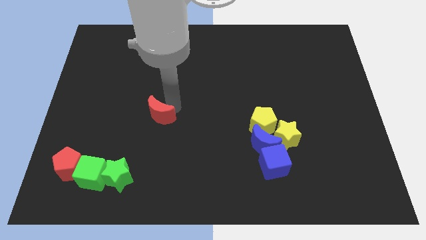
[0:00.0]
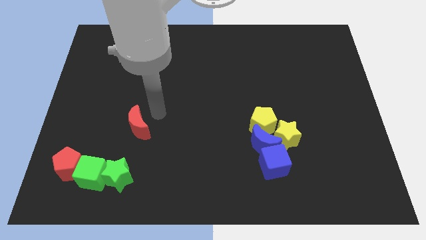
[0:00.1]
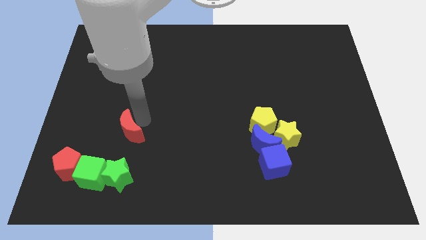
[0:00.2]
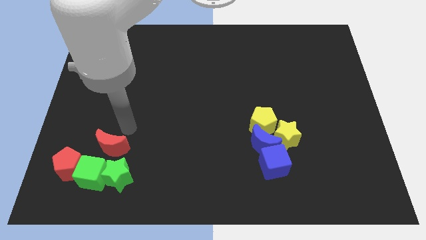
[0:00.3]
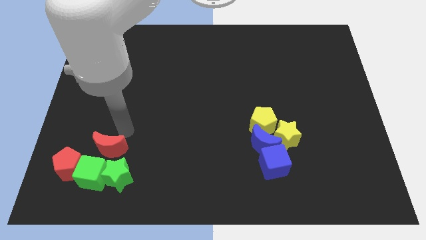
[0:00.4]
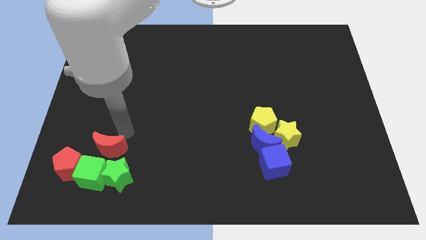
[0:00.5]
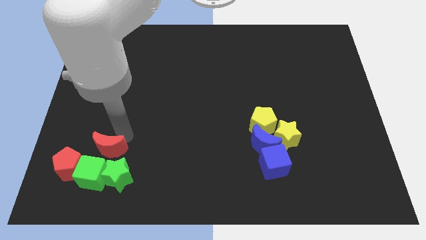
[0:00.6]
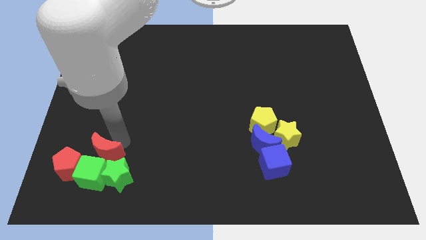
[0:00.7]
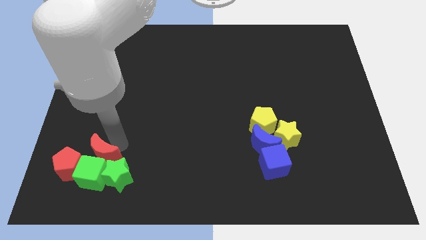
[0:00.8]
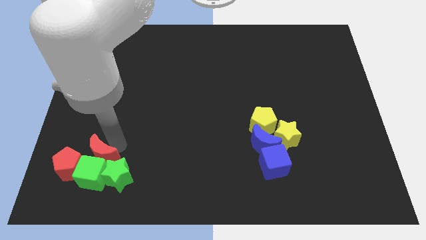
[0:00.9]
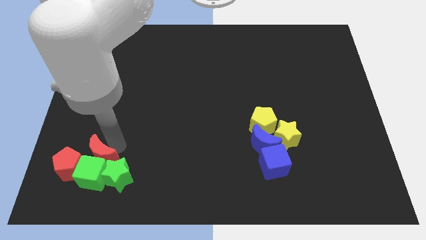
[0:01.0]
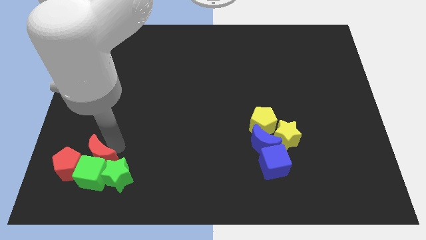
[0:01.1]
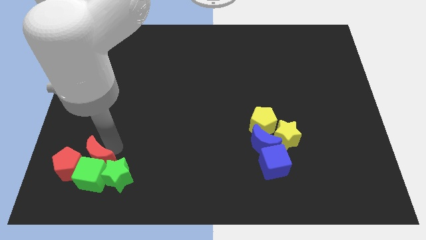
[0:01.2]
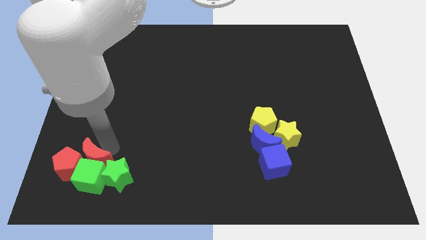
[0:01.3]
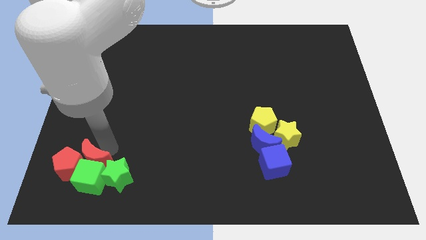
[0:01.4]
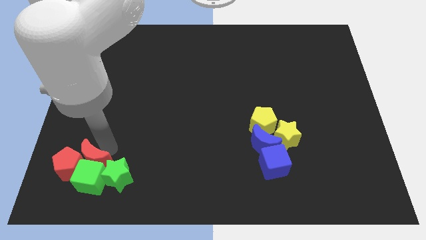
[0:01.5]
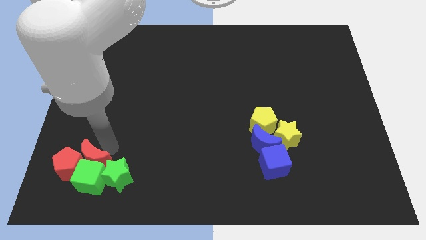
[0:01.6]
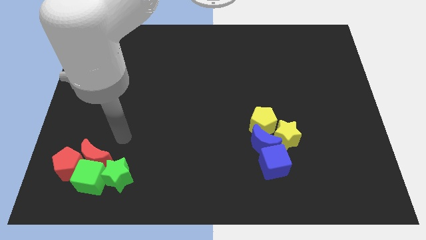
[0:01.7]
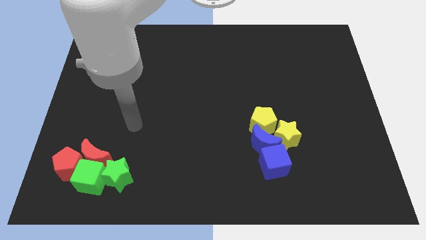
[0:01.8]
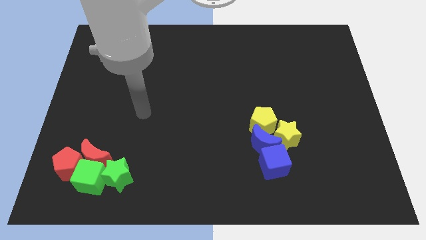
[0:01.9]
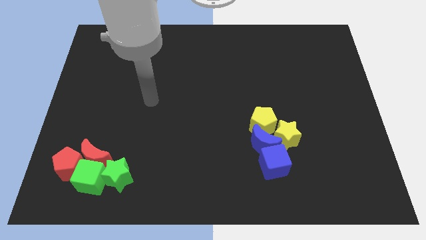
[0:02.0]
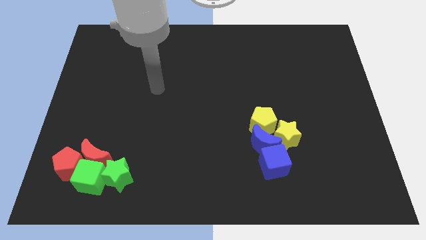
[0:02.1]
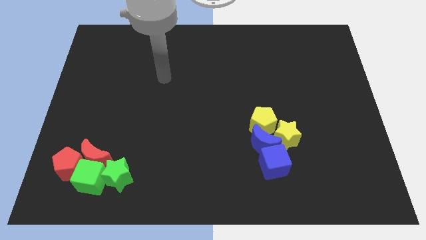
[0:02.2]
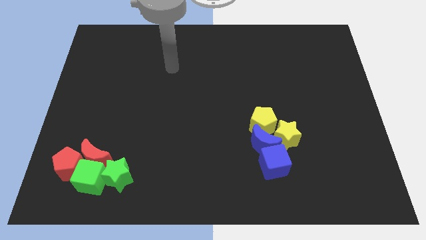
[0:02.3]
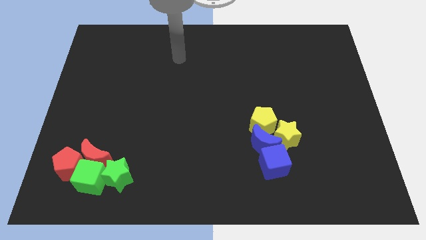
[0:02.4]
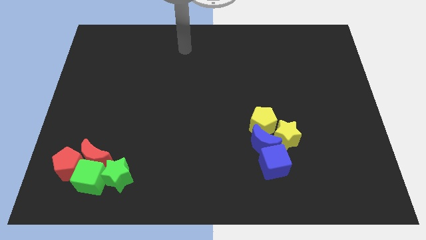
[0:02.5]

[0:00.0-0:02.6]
move the red moon above the green cube

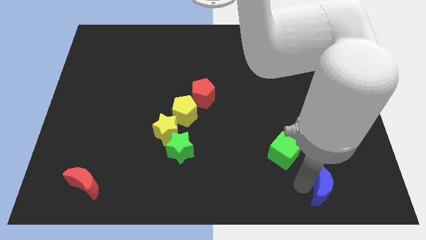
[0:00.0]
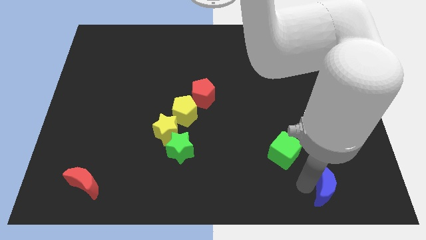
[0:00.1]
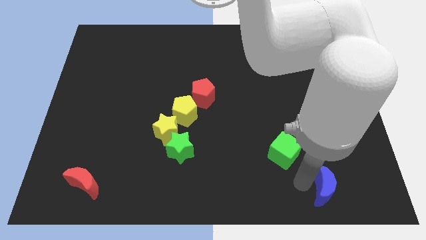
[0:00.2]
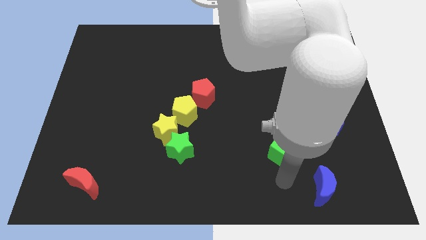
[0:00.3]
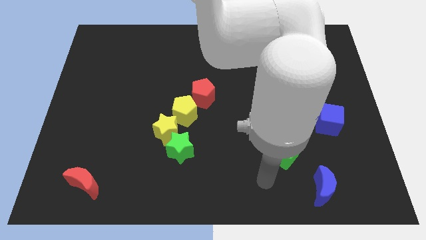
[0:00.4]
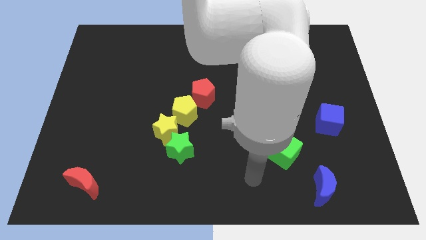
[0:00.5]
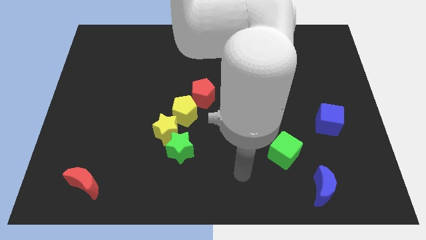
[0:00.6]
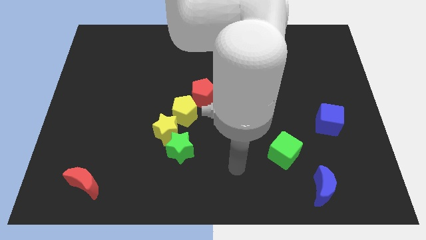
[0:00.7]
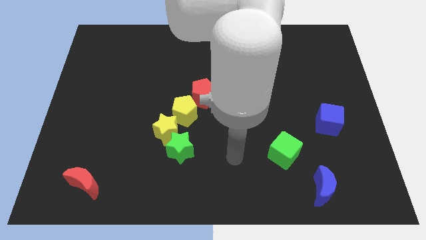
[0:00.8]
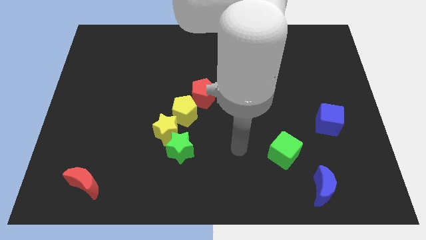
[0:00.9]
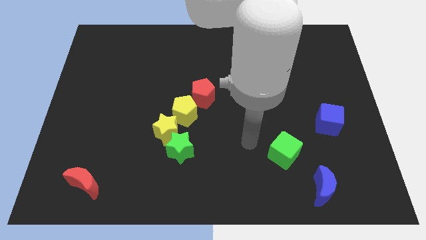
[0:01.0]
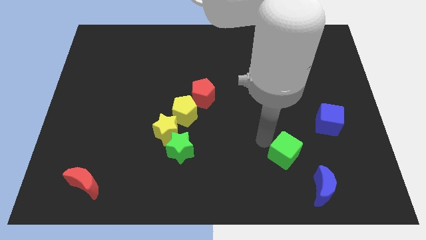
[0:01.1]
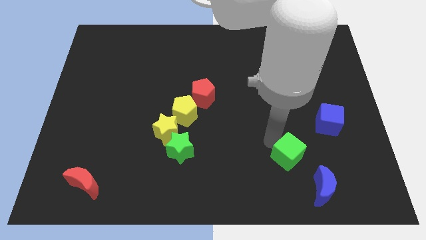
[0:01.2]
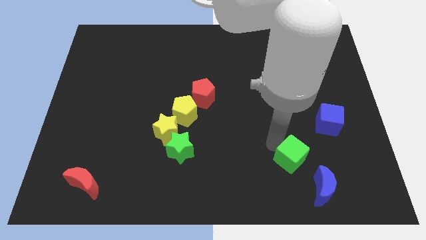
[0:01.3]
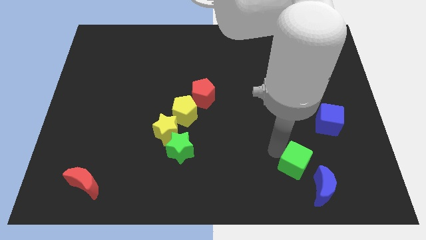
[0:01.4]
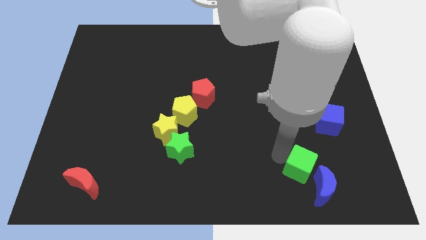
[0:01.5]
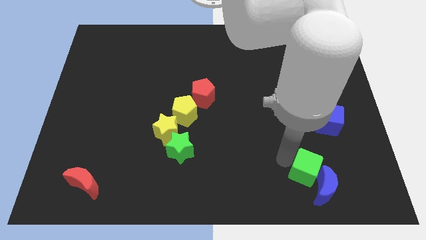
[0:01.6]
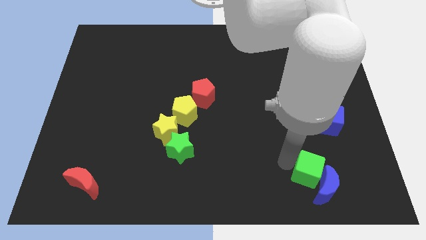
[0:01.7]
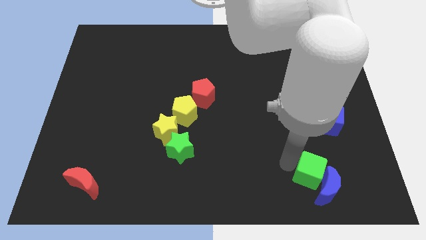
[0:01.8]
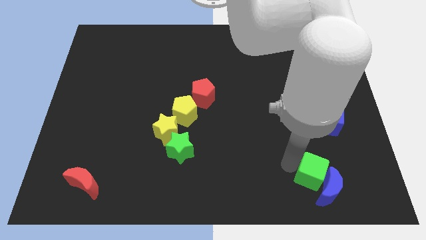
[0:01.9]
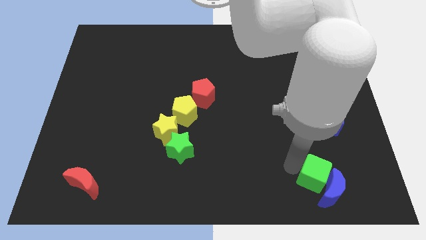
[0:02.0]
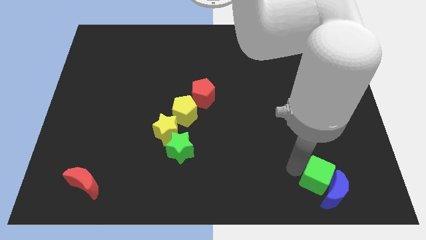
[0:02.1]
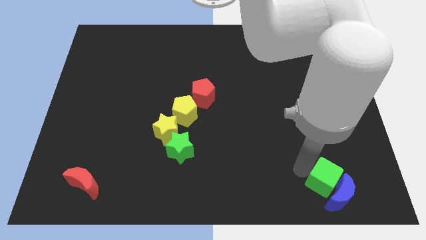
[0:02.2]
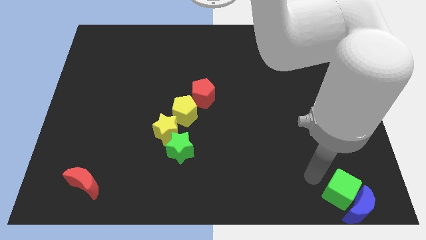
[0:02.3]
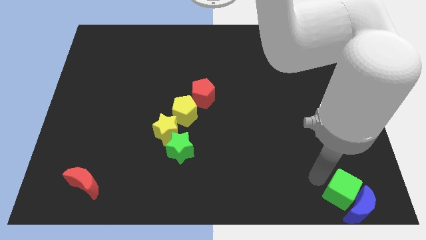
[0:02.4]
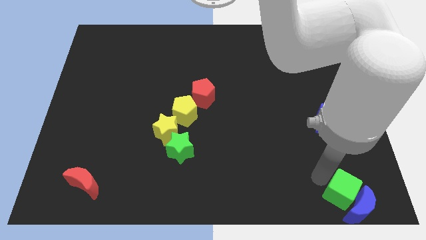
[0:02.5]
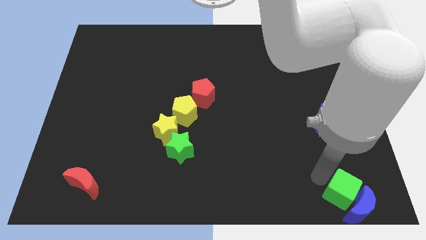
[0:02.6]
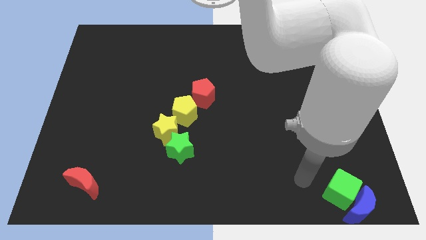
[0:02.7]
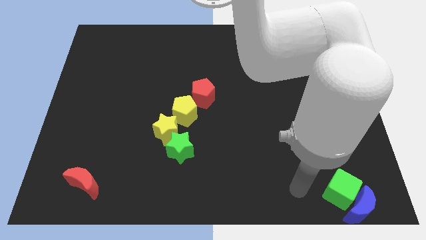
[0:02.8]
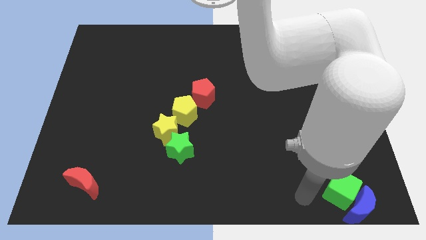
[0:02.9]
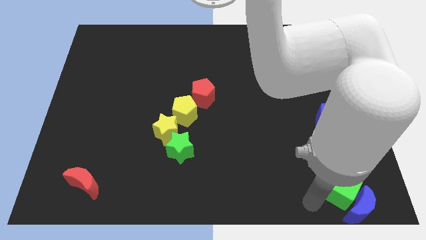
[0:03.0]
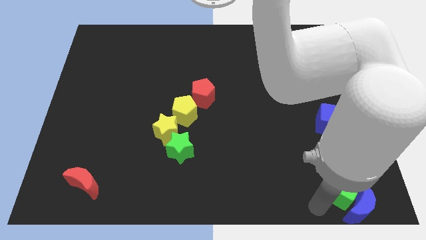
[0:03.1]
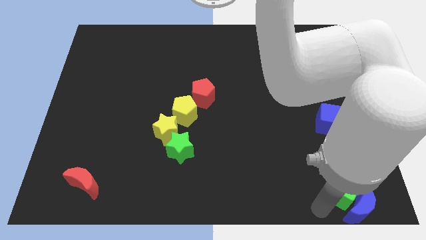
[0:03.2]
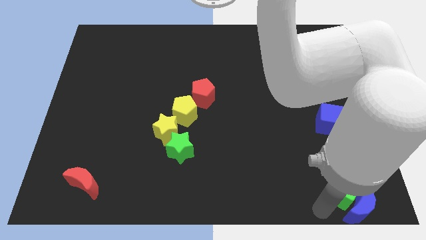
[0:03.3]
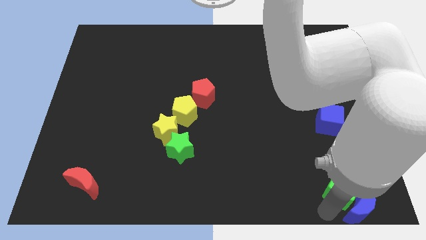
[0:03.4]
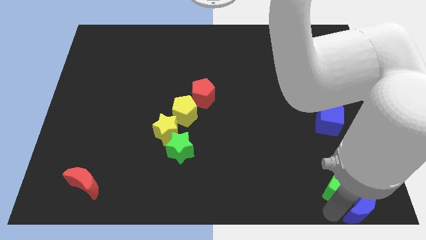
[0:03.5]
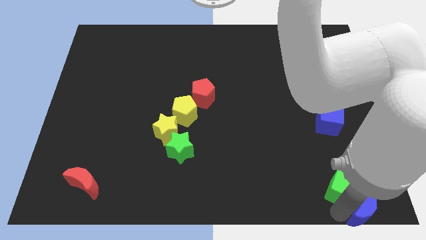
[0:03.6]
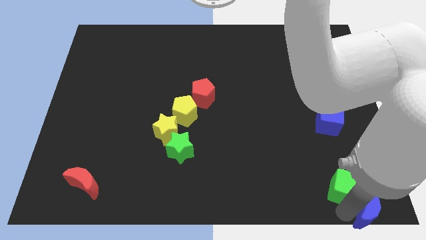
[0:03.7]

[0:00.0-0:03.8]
move the green cube and blue moon in the bottom right

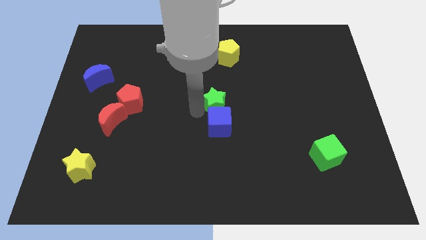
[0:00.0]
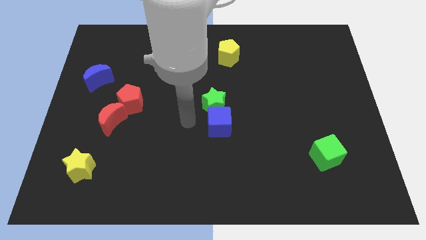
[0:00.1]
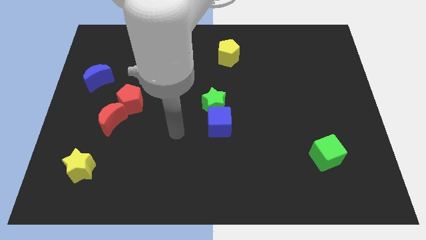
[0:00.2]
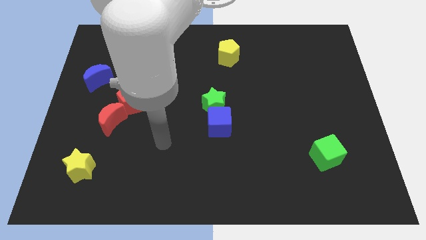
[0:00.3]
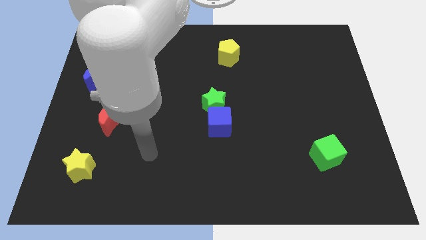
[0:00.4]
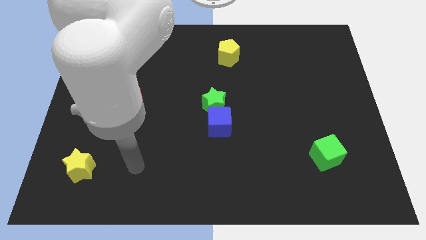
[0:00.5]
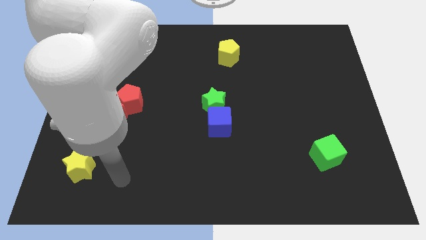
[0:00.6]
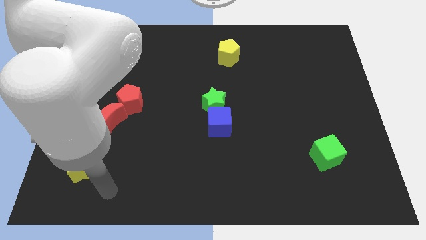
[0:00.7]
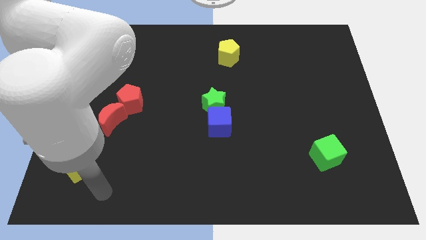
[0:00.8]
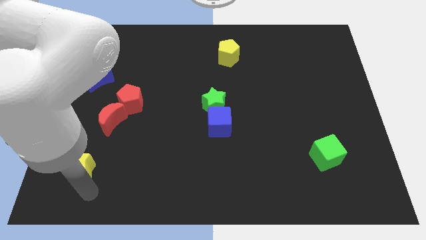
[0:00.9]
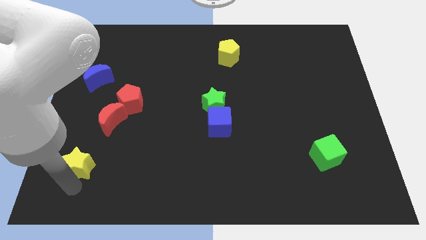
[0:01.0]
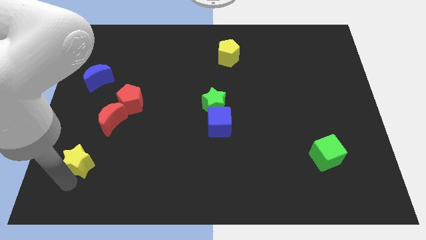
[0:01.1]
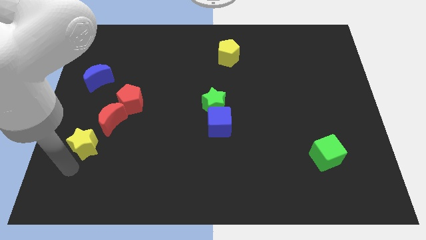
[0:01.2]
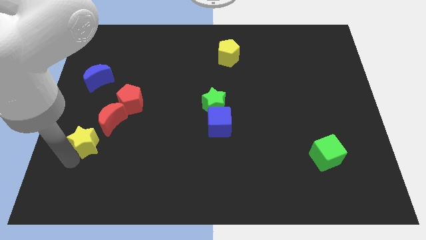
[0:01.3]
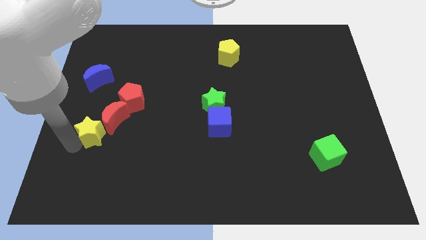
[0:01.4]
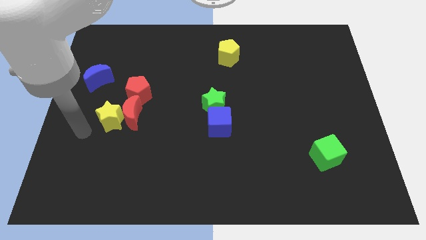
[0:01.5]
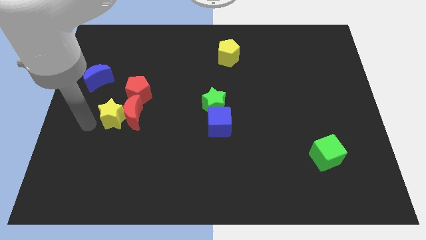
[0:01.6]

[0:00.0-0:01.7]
move the yellow star into the red moon

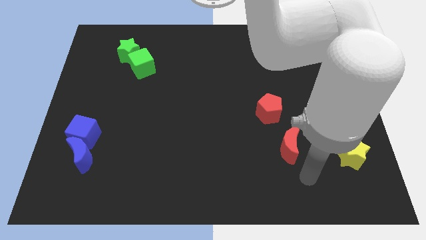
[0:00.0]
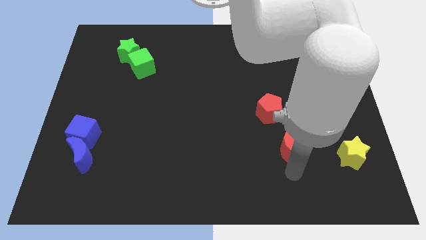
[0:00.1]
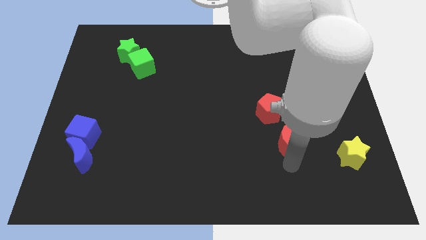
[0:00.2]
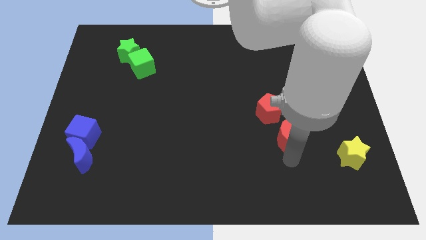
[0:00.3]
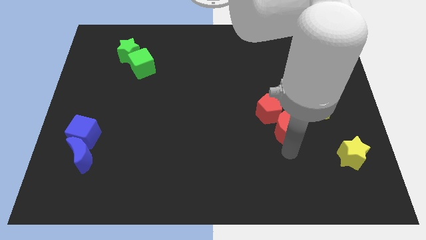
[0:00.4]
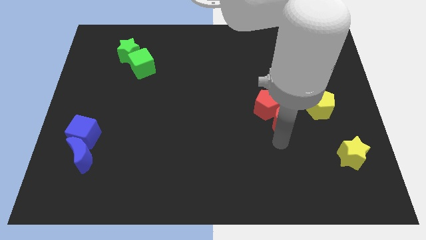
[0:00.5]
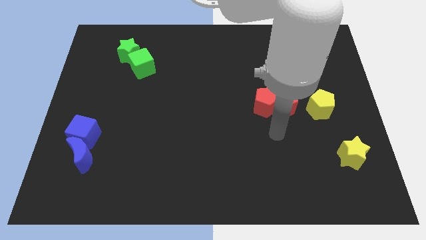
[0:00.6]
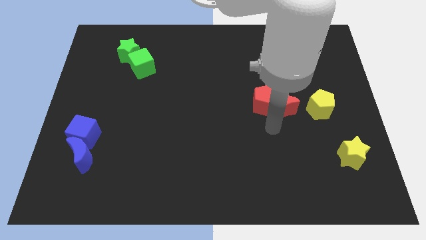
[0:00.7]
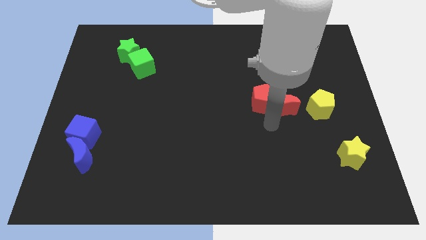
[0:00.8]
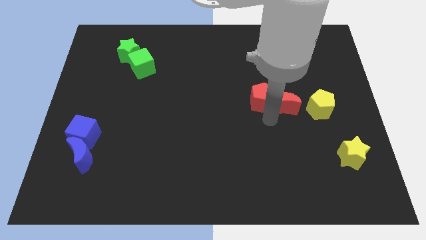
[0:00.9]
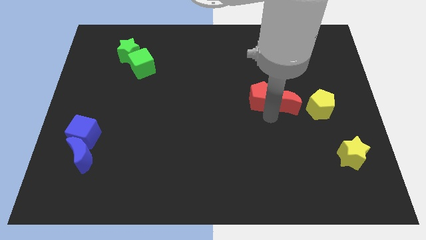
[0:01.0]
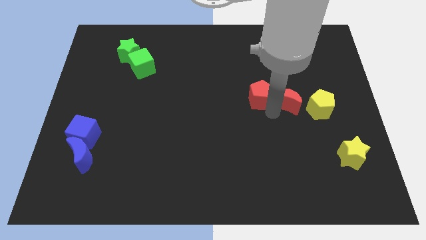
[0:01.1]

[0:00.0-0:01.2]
move red moon right beside the red pentagon
